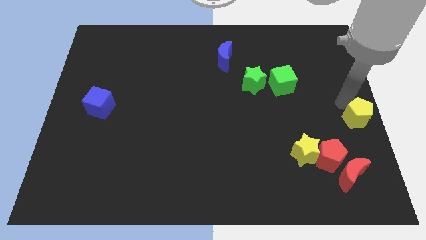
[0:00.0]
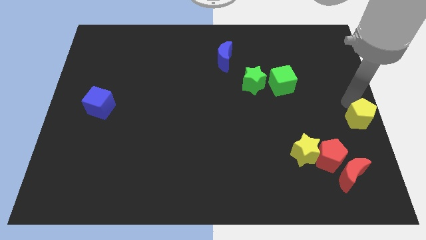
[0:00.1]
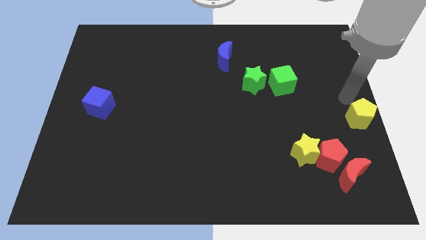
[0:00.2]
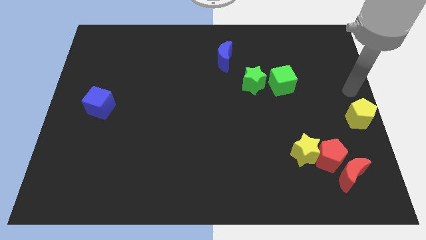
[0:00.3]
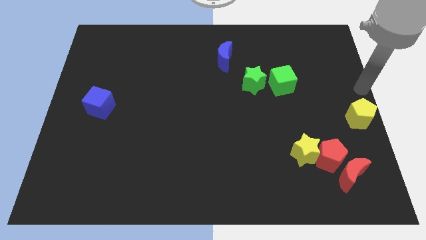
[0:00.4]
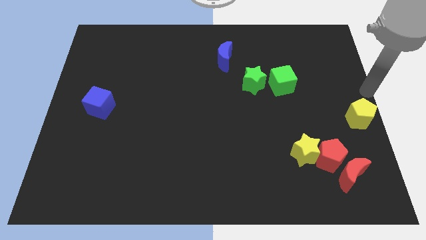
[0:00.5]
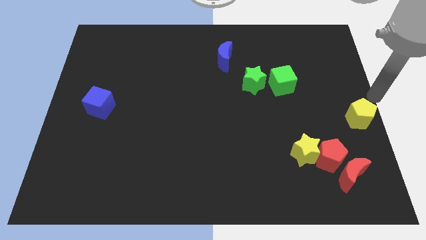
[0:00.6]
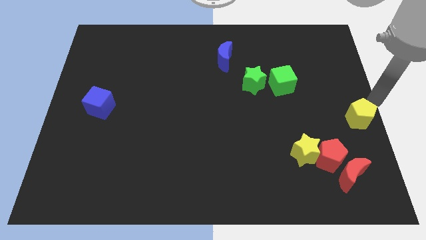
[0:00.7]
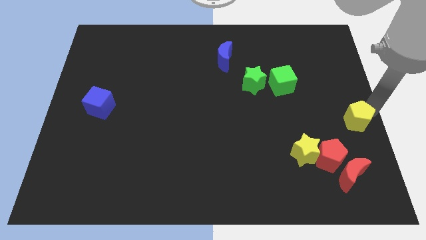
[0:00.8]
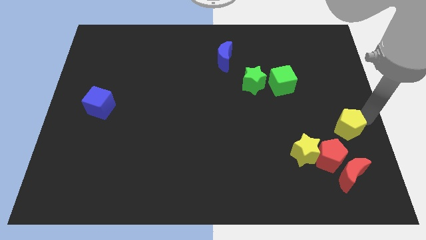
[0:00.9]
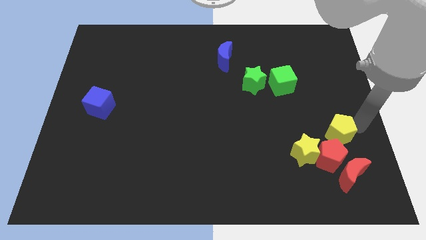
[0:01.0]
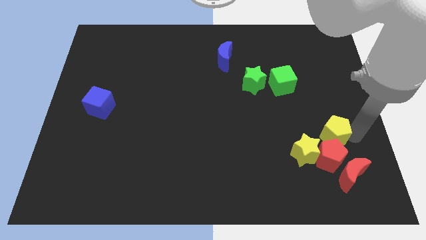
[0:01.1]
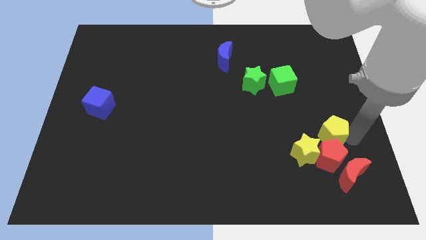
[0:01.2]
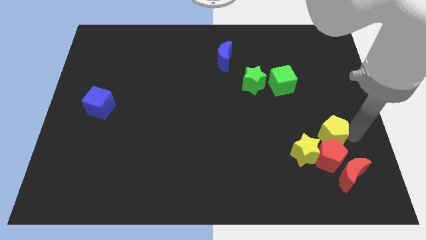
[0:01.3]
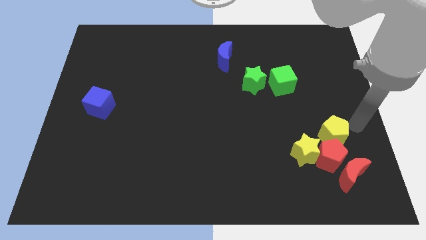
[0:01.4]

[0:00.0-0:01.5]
push the yellow pentagon into the red pentagon

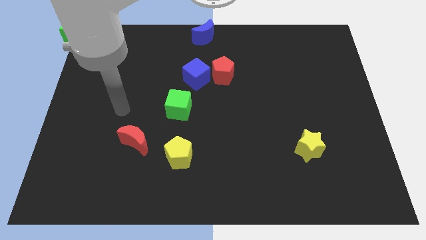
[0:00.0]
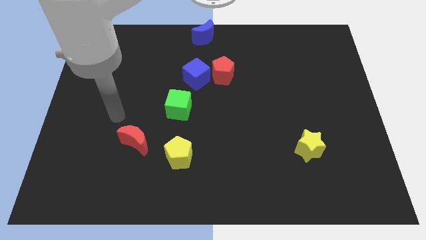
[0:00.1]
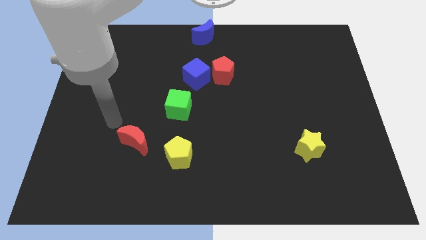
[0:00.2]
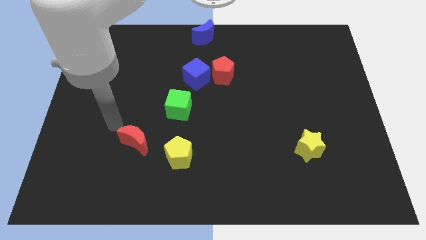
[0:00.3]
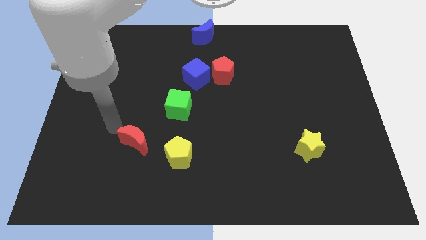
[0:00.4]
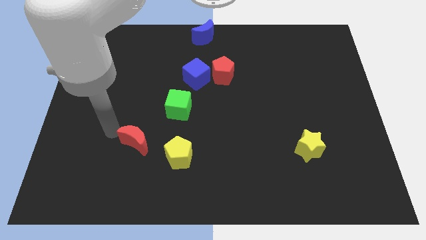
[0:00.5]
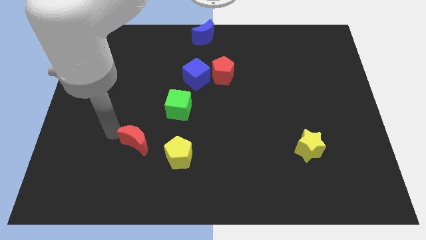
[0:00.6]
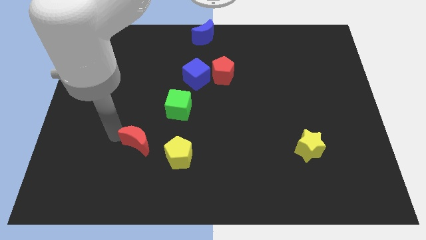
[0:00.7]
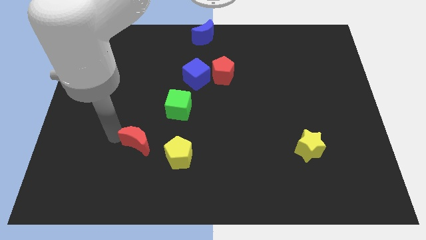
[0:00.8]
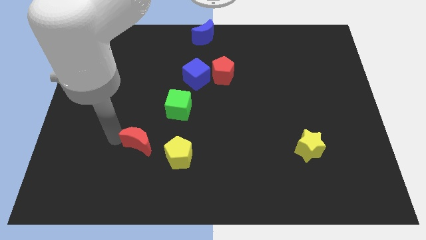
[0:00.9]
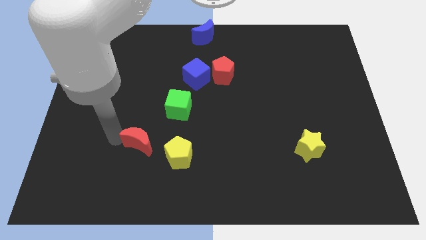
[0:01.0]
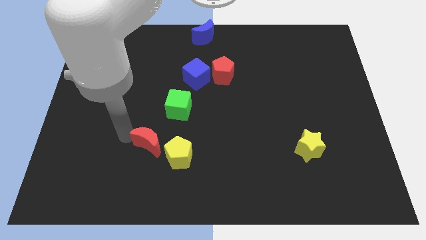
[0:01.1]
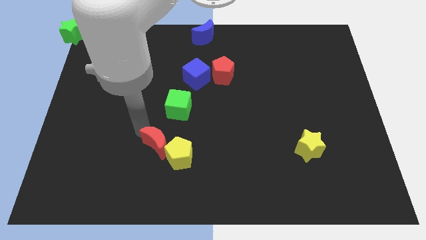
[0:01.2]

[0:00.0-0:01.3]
move the red crescent into the left side of the yellow pentagon

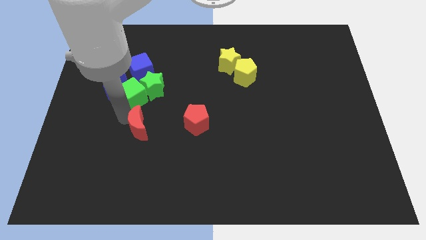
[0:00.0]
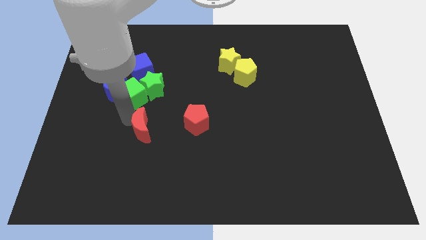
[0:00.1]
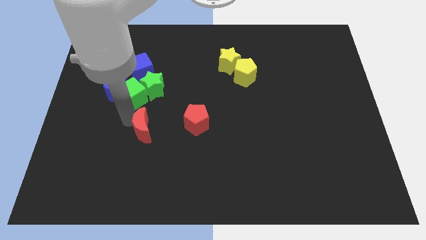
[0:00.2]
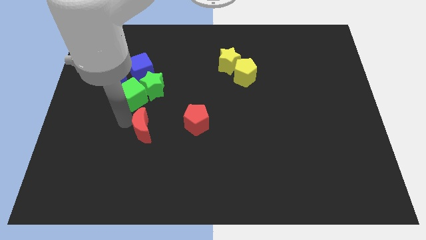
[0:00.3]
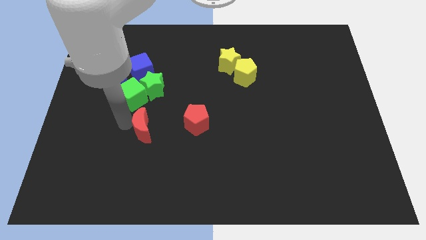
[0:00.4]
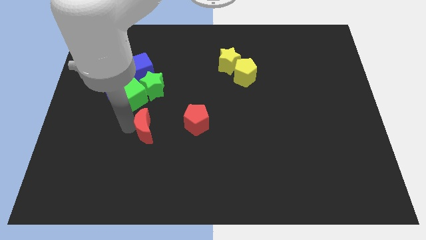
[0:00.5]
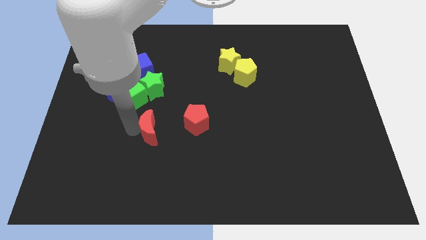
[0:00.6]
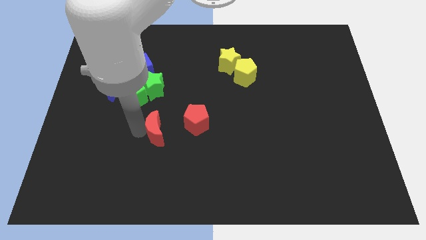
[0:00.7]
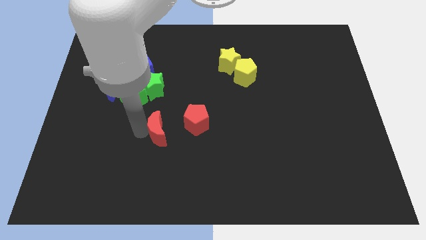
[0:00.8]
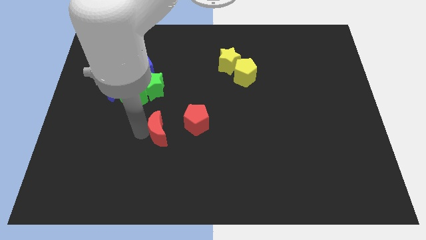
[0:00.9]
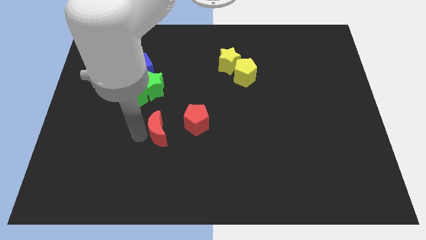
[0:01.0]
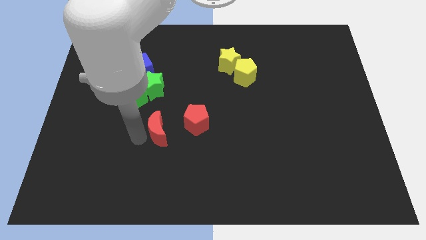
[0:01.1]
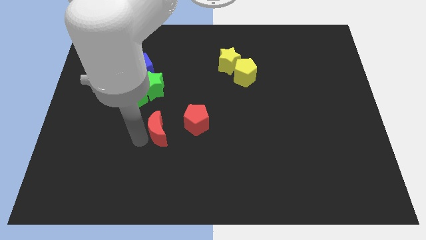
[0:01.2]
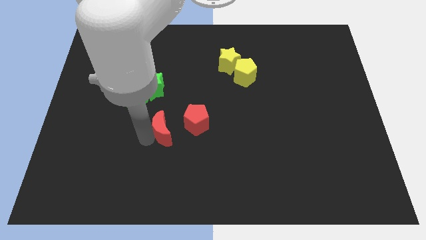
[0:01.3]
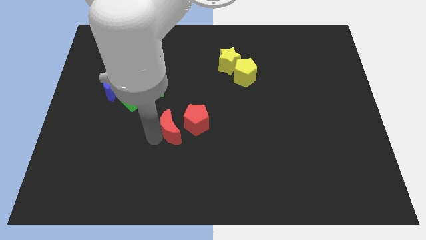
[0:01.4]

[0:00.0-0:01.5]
push the red moon towards the red pentagon

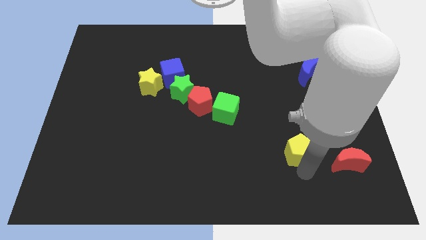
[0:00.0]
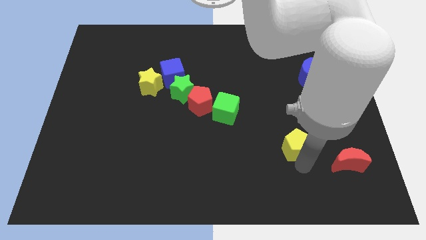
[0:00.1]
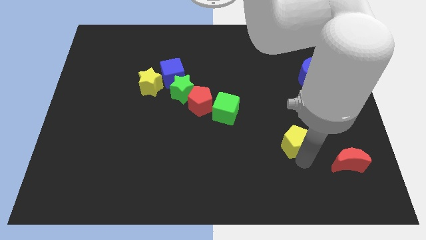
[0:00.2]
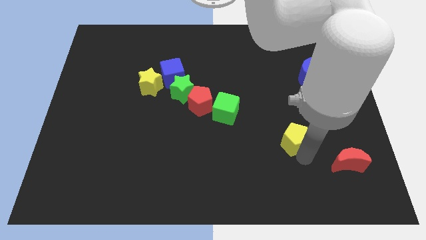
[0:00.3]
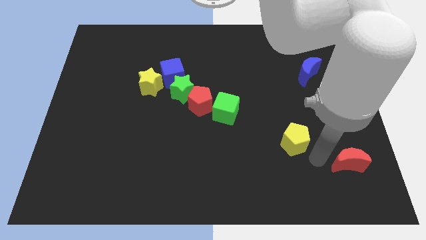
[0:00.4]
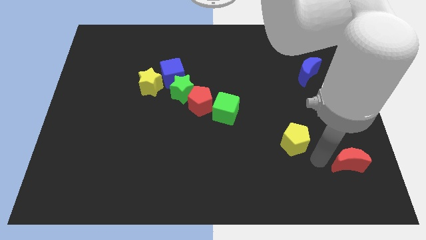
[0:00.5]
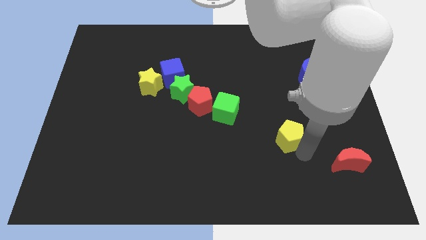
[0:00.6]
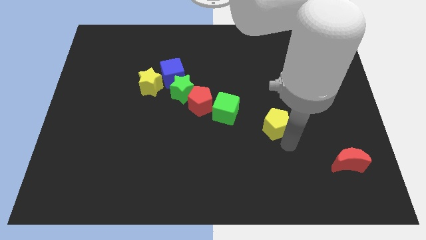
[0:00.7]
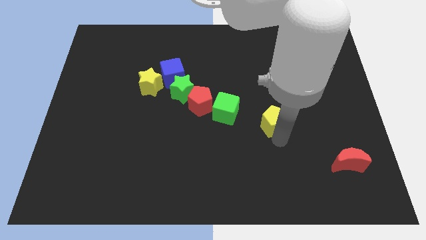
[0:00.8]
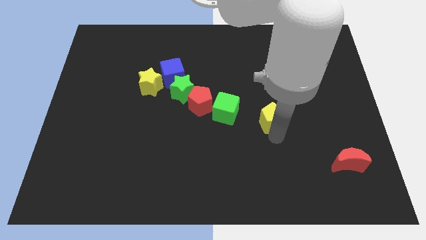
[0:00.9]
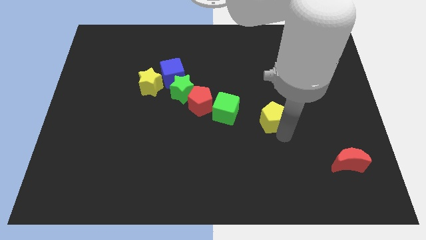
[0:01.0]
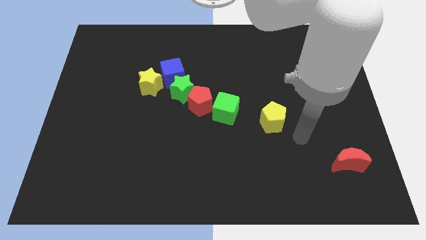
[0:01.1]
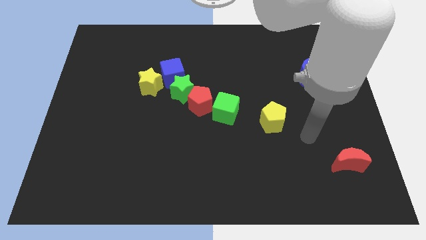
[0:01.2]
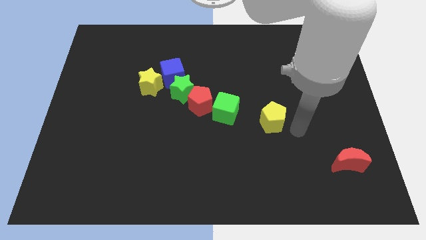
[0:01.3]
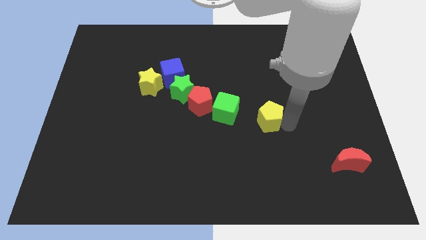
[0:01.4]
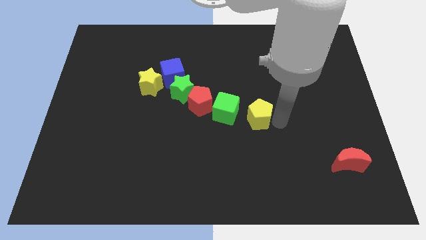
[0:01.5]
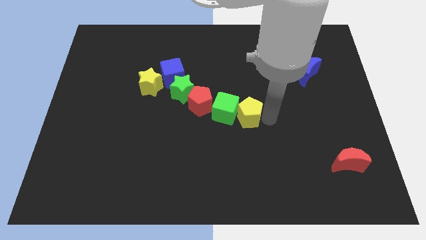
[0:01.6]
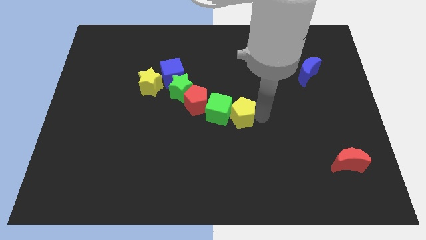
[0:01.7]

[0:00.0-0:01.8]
move the yellow pentagon towards the green cube

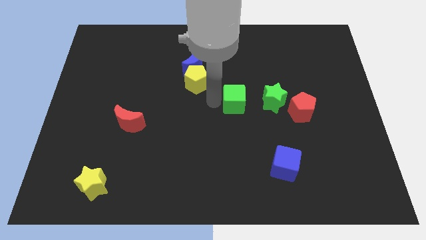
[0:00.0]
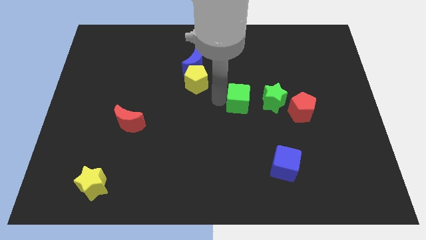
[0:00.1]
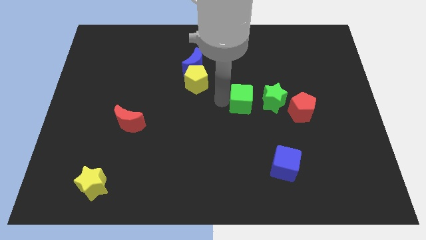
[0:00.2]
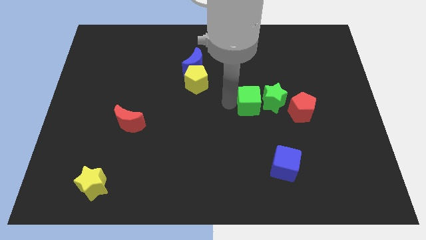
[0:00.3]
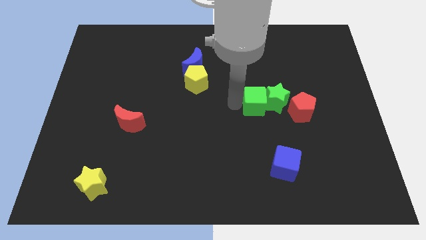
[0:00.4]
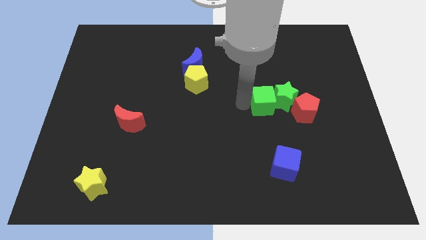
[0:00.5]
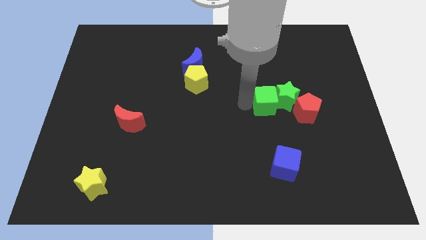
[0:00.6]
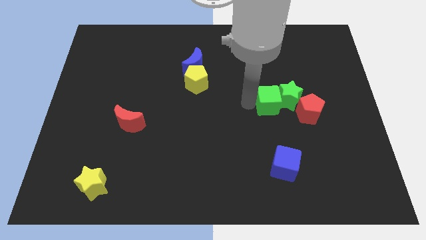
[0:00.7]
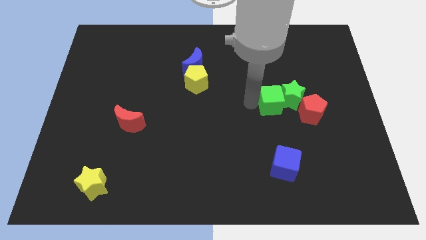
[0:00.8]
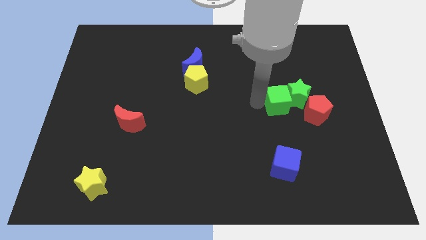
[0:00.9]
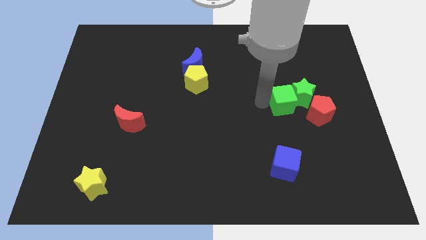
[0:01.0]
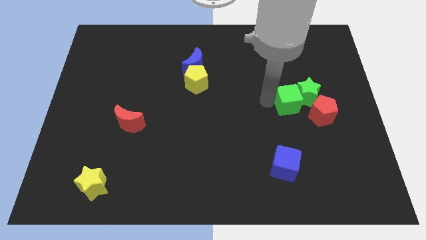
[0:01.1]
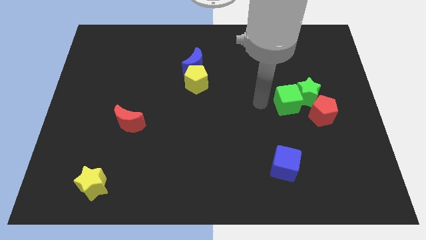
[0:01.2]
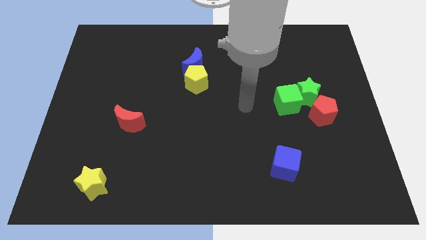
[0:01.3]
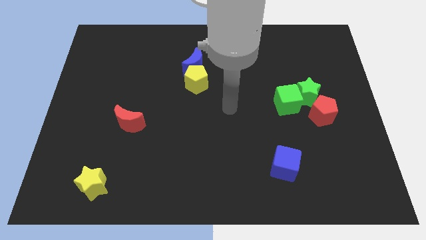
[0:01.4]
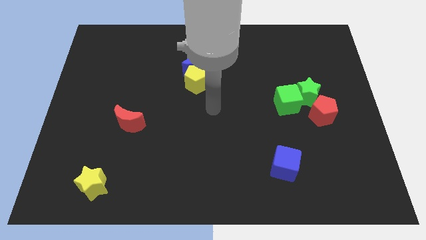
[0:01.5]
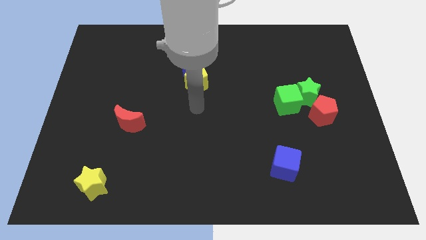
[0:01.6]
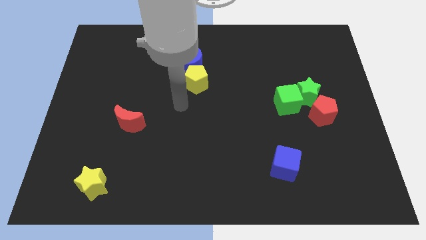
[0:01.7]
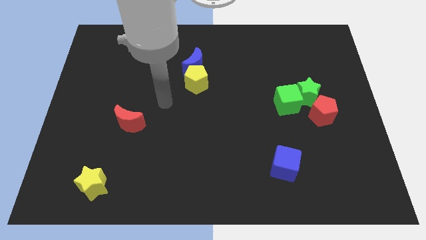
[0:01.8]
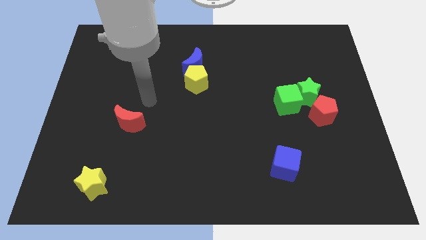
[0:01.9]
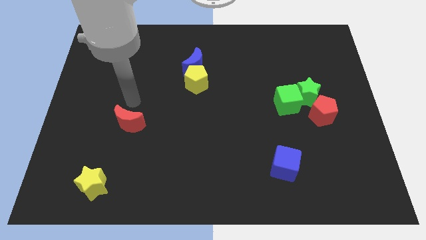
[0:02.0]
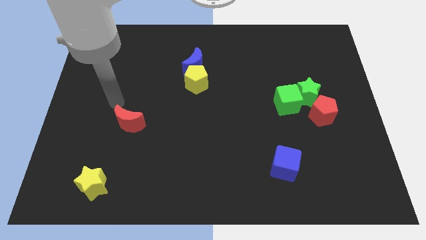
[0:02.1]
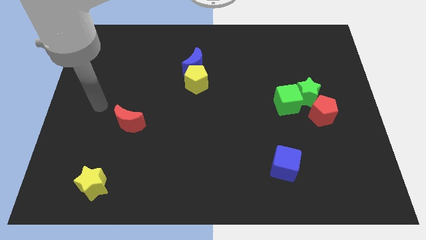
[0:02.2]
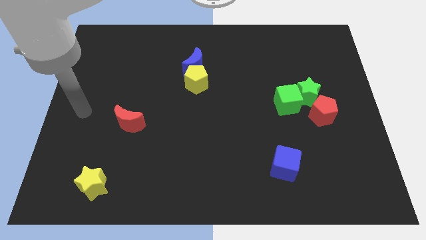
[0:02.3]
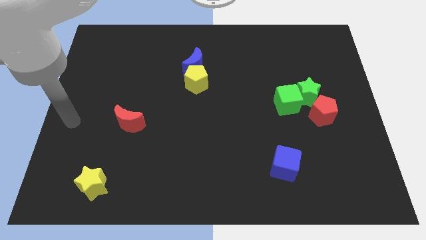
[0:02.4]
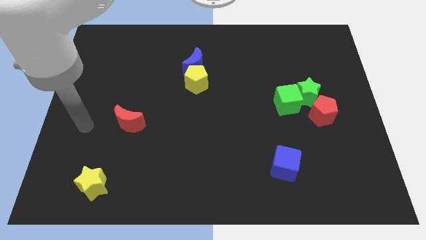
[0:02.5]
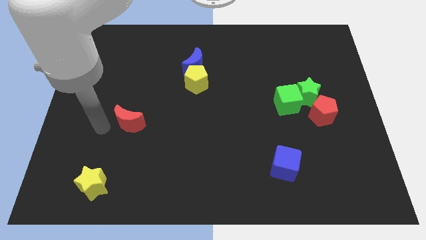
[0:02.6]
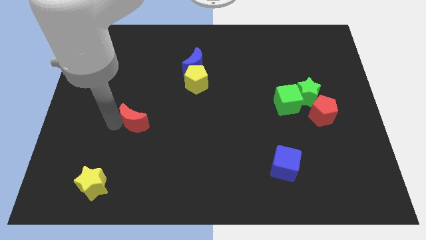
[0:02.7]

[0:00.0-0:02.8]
tap the red crescent
